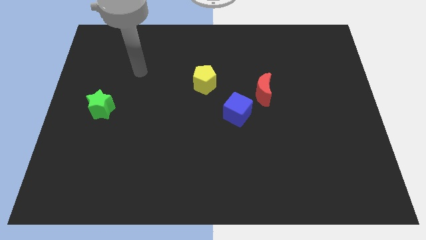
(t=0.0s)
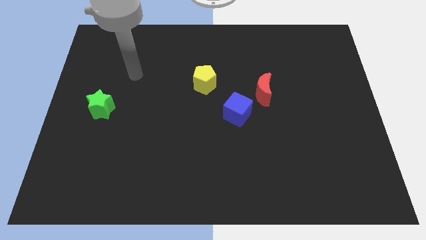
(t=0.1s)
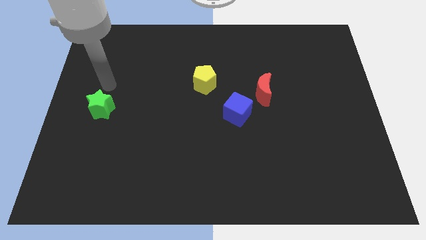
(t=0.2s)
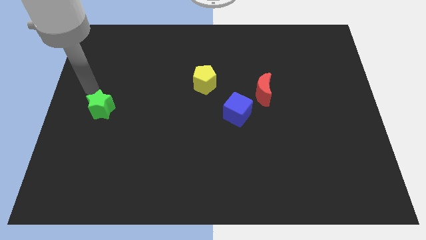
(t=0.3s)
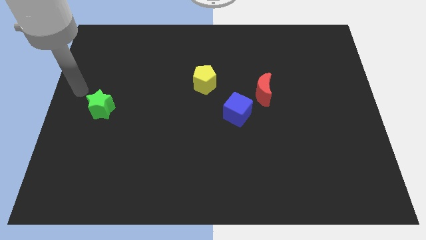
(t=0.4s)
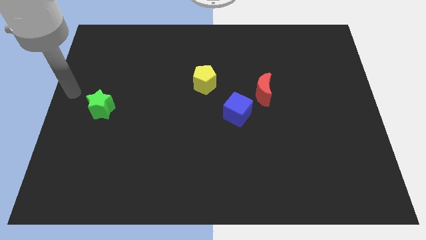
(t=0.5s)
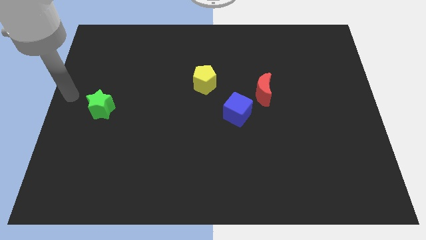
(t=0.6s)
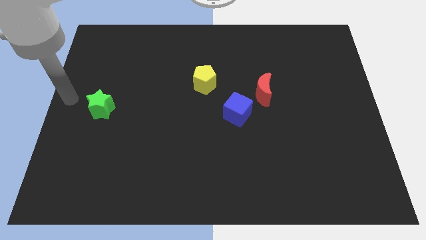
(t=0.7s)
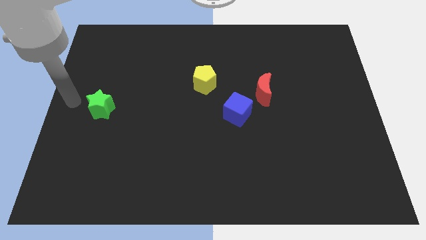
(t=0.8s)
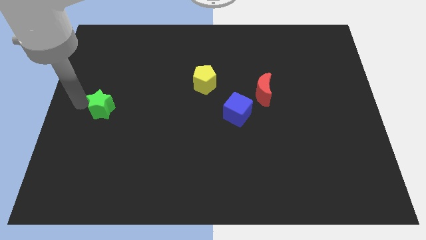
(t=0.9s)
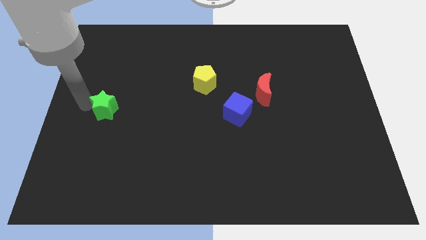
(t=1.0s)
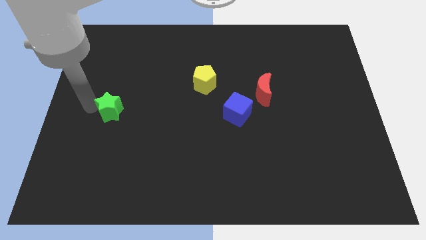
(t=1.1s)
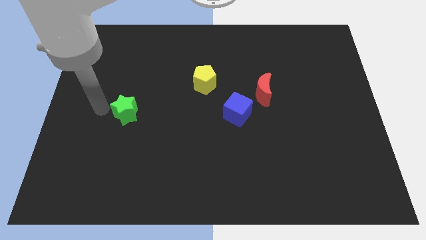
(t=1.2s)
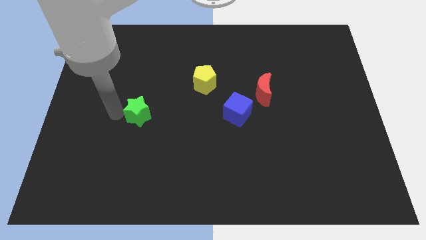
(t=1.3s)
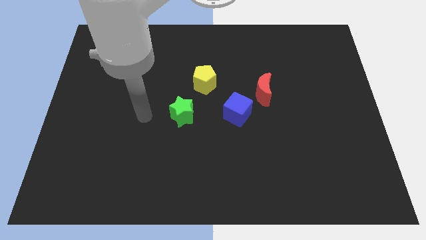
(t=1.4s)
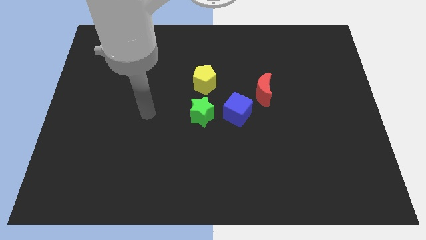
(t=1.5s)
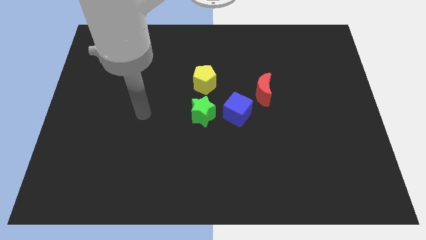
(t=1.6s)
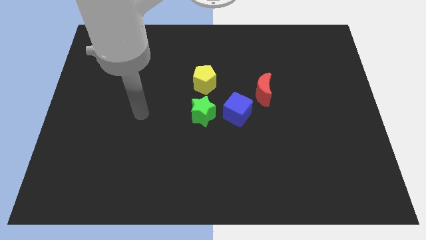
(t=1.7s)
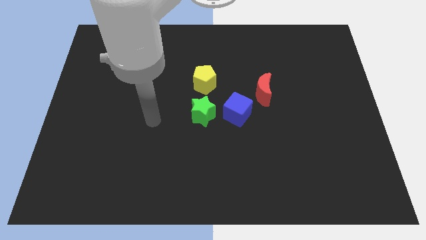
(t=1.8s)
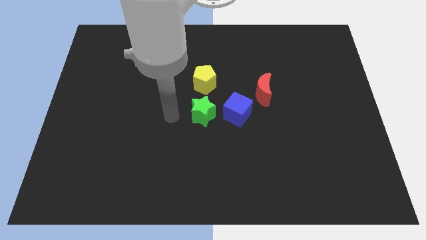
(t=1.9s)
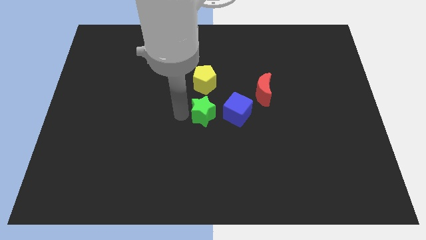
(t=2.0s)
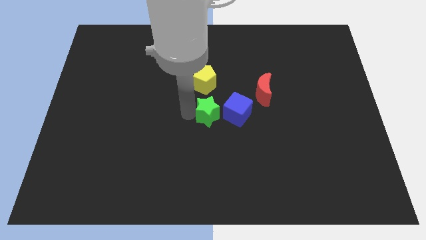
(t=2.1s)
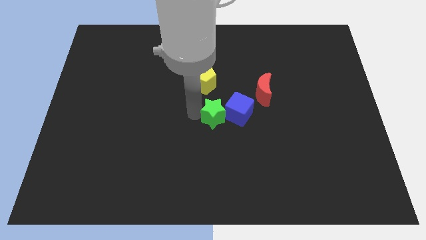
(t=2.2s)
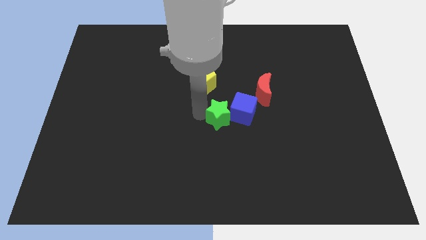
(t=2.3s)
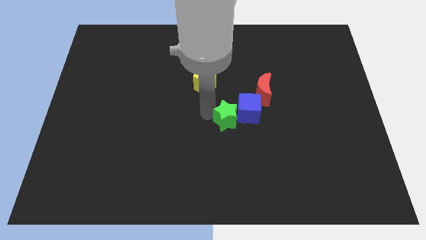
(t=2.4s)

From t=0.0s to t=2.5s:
put the star towards the blue block

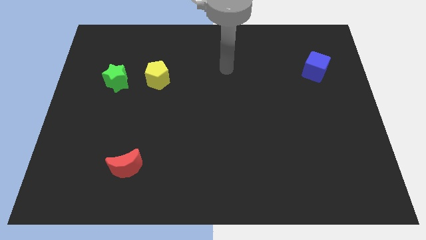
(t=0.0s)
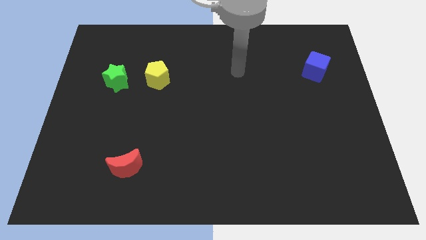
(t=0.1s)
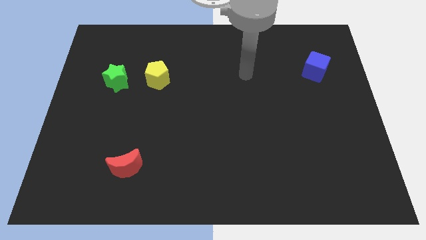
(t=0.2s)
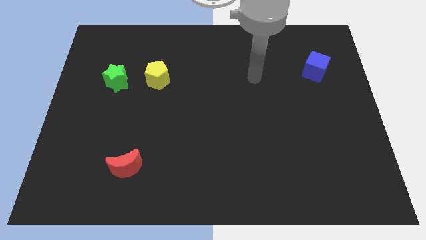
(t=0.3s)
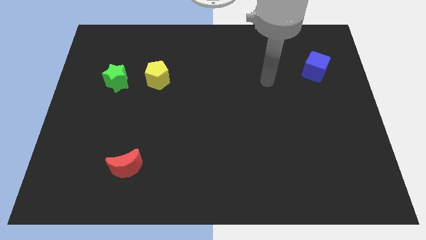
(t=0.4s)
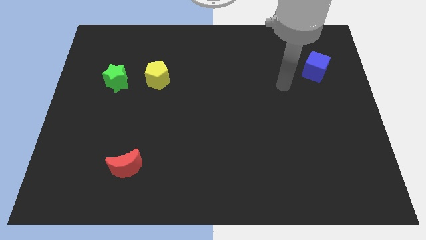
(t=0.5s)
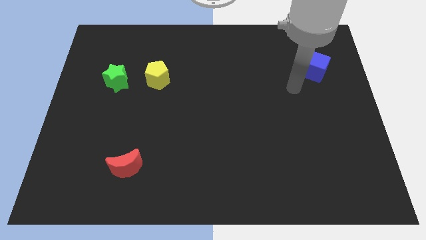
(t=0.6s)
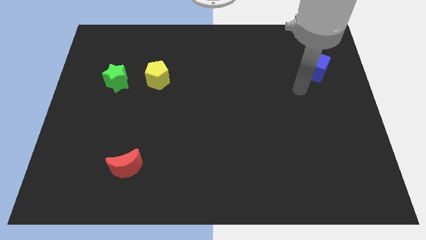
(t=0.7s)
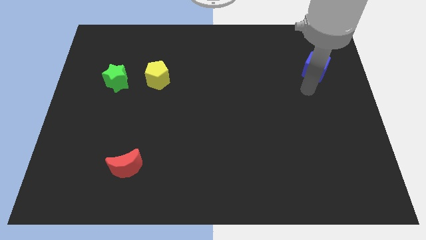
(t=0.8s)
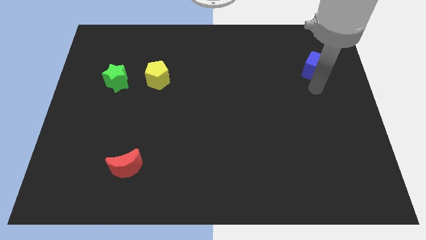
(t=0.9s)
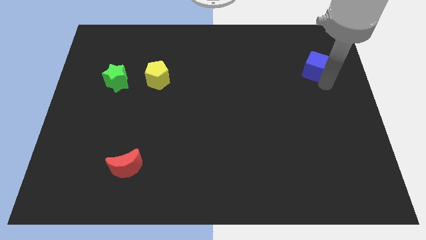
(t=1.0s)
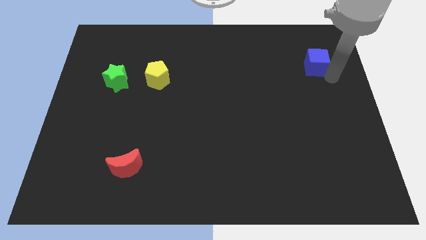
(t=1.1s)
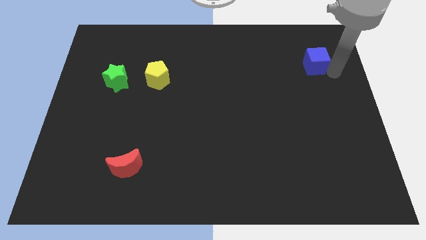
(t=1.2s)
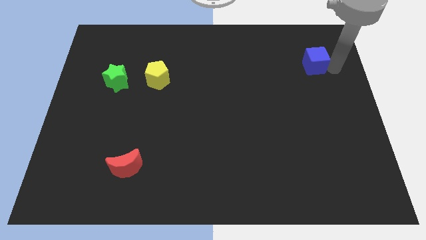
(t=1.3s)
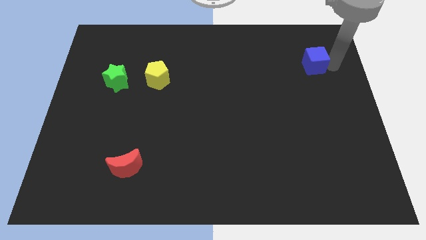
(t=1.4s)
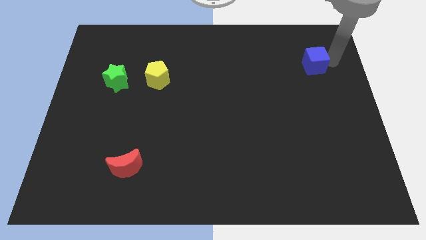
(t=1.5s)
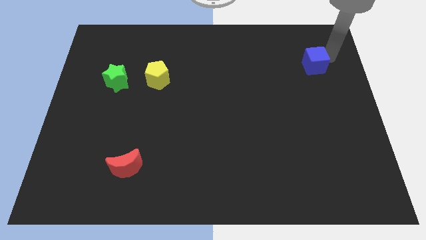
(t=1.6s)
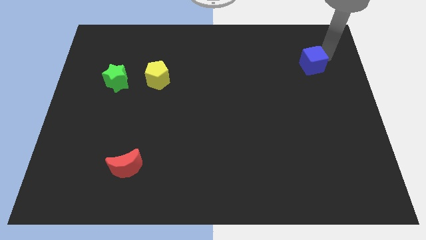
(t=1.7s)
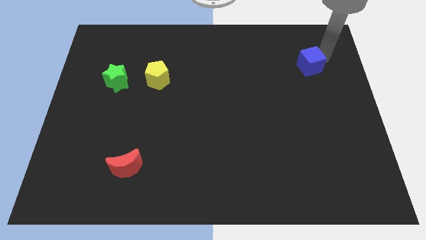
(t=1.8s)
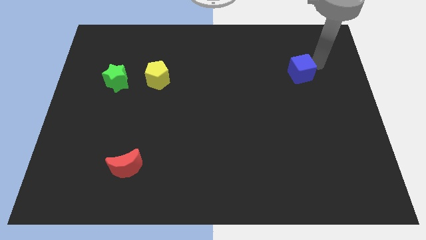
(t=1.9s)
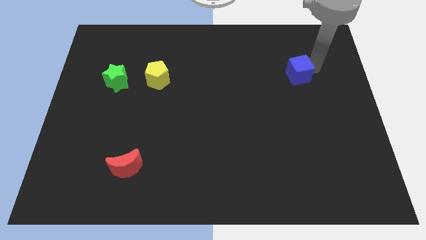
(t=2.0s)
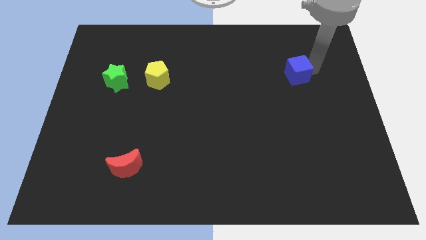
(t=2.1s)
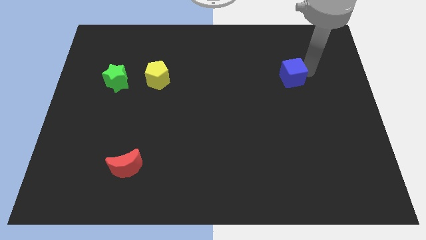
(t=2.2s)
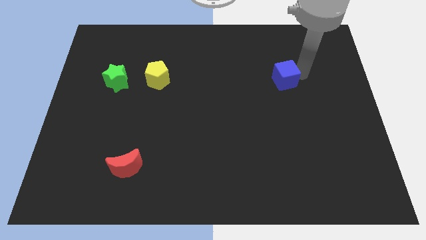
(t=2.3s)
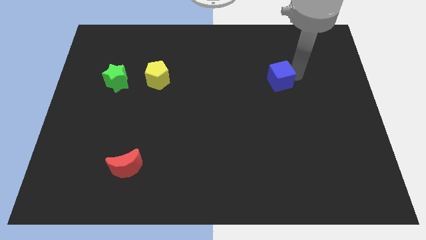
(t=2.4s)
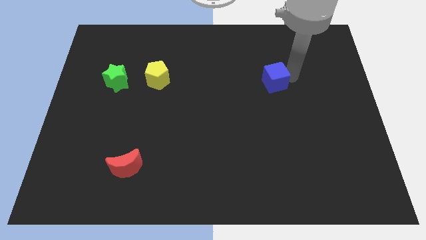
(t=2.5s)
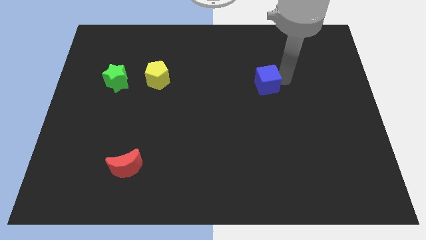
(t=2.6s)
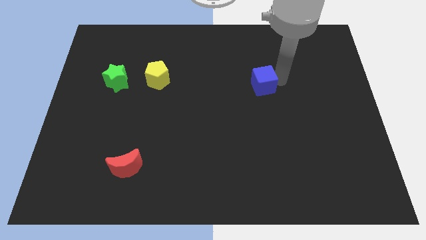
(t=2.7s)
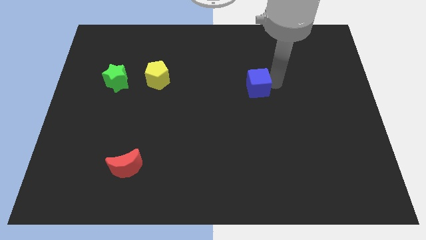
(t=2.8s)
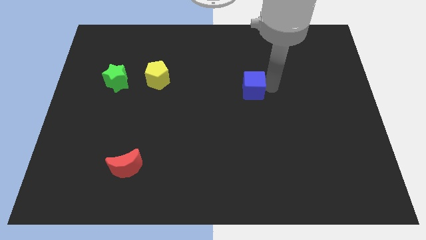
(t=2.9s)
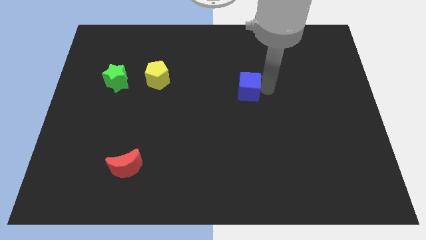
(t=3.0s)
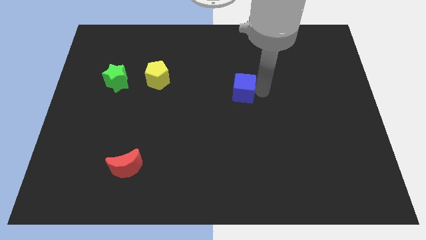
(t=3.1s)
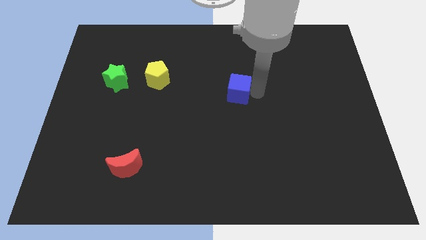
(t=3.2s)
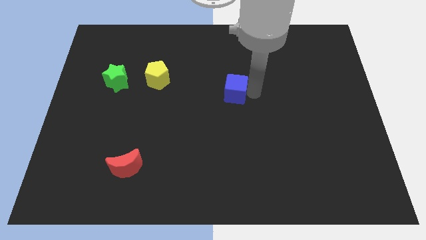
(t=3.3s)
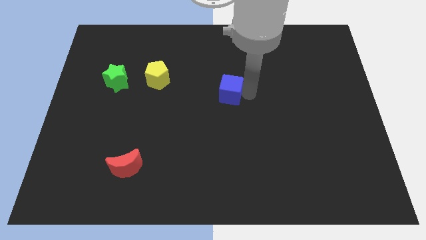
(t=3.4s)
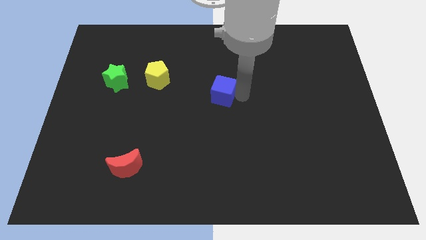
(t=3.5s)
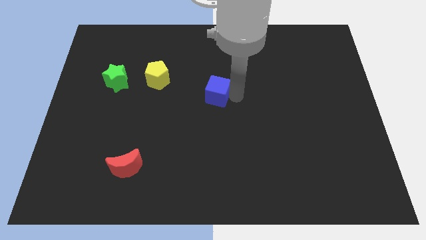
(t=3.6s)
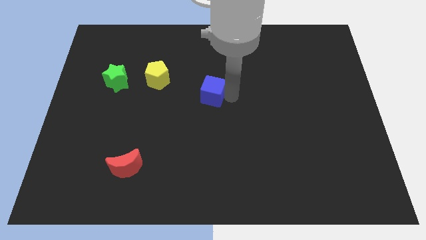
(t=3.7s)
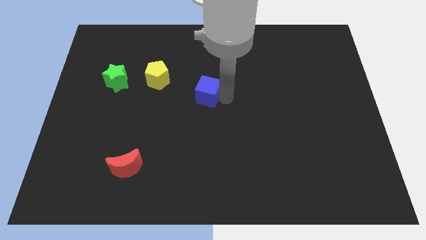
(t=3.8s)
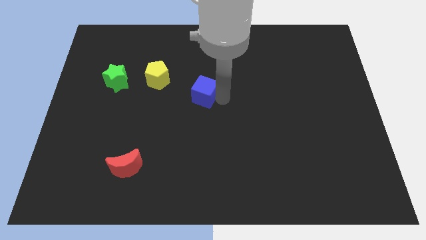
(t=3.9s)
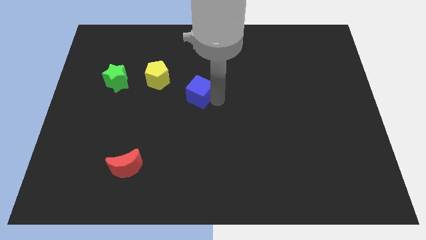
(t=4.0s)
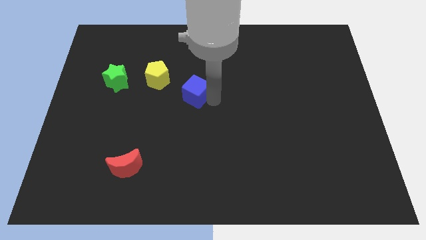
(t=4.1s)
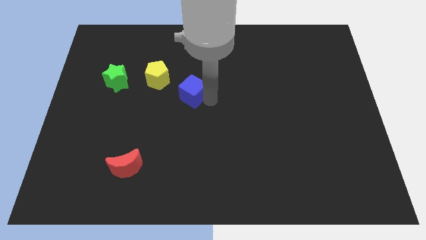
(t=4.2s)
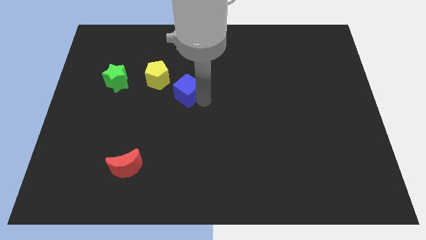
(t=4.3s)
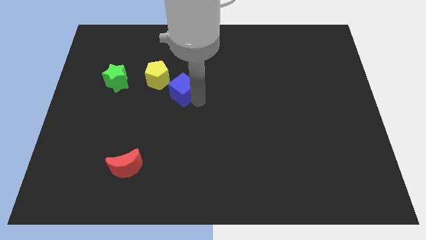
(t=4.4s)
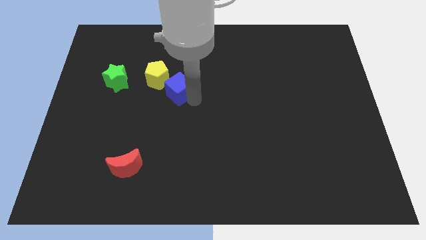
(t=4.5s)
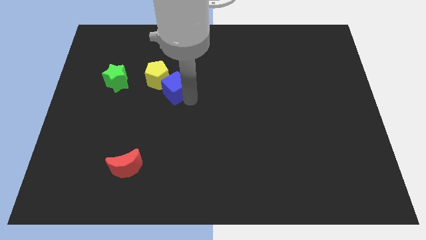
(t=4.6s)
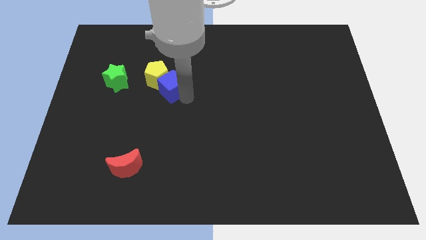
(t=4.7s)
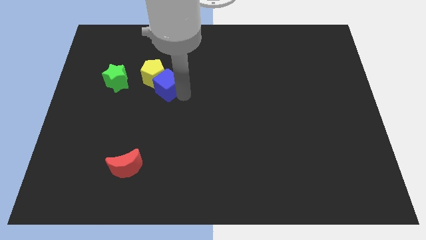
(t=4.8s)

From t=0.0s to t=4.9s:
put the blue cube close to the yellow block

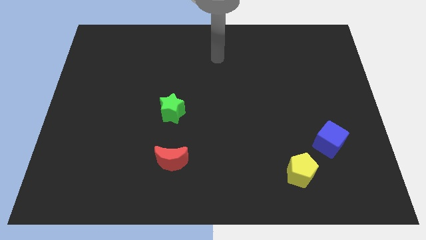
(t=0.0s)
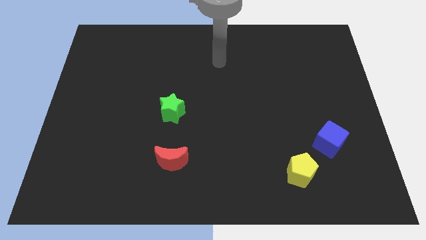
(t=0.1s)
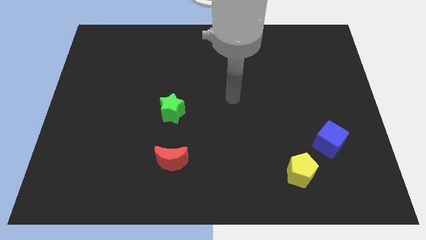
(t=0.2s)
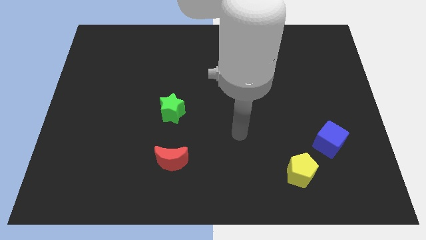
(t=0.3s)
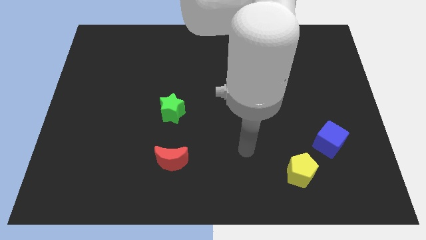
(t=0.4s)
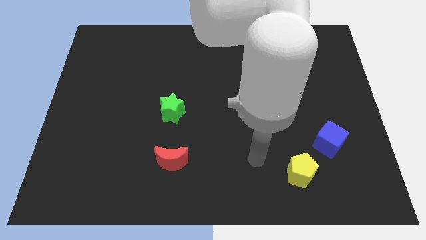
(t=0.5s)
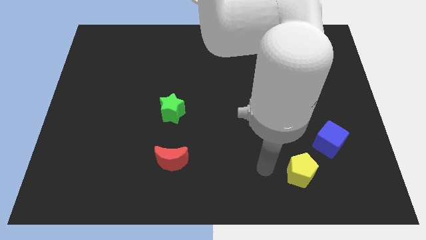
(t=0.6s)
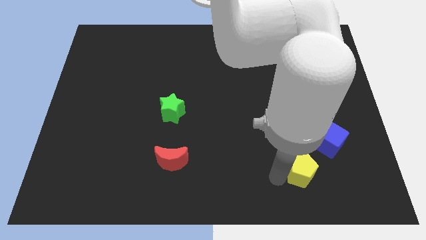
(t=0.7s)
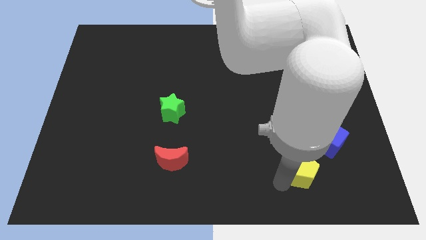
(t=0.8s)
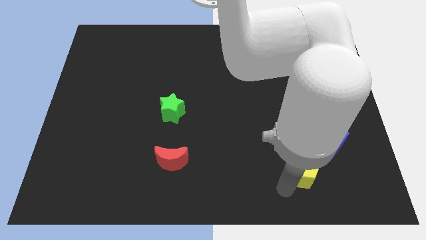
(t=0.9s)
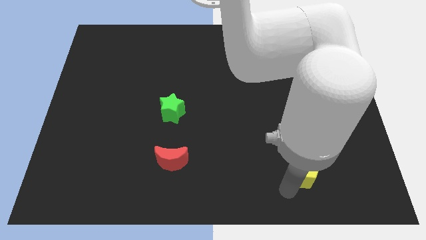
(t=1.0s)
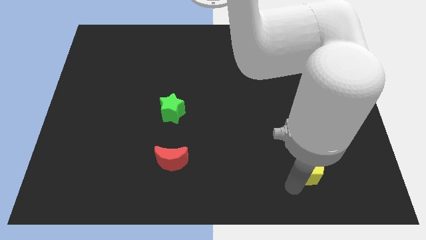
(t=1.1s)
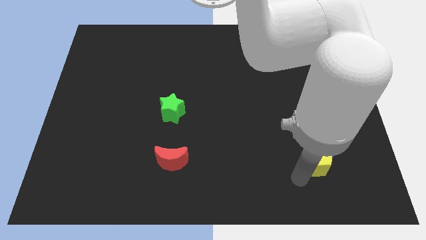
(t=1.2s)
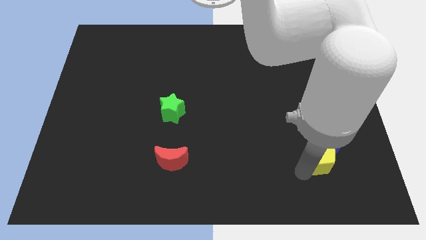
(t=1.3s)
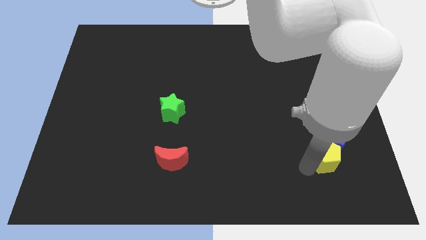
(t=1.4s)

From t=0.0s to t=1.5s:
slide the pentagon to the blue block
